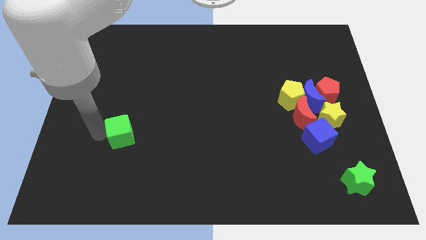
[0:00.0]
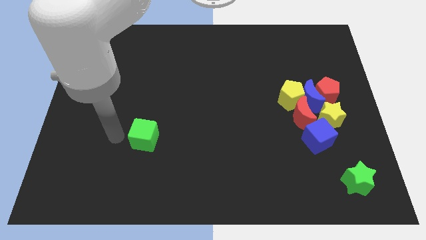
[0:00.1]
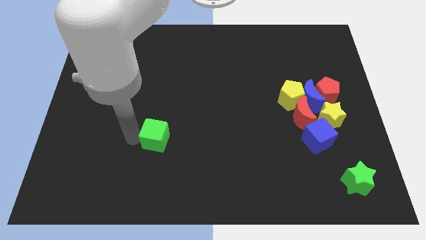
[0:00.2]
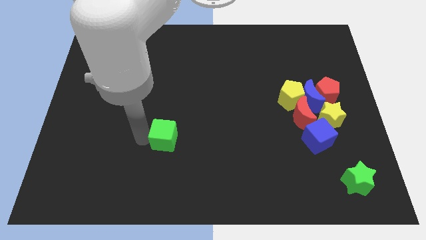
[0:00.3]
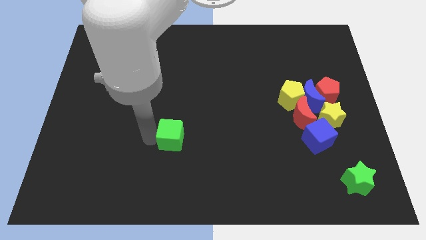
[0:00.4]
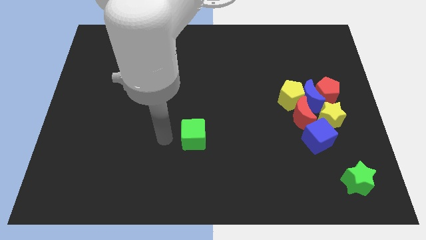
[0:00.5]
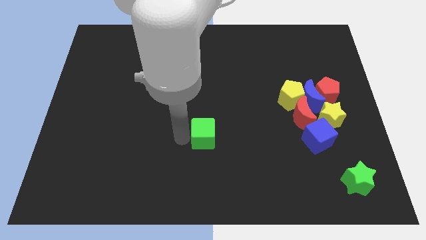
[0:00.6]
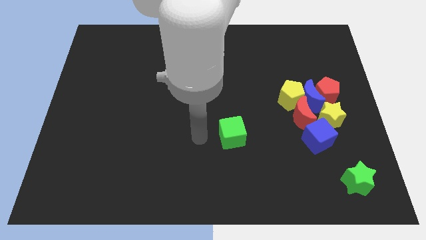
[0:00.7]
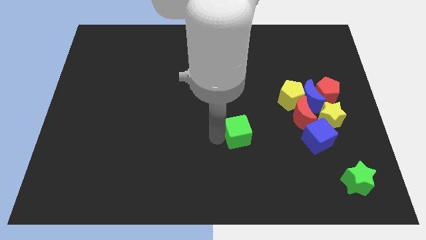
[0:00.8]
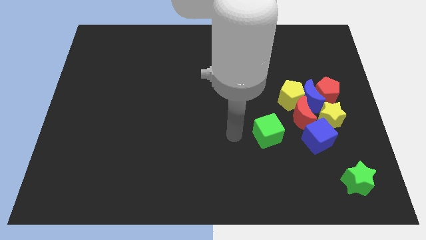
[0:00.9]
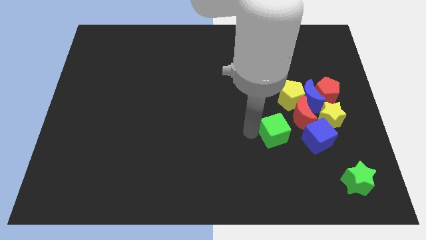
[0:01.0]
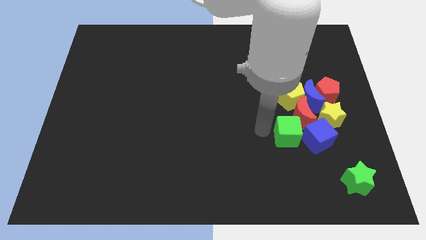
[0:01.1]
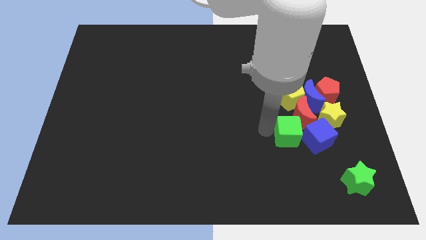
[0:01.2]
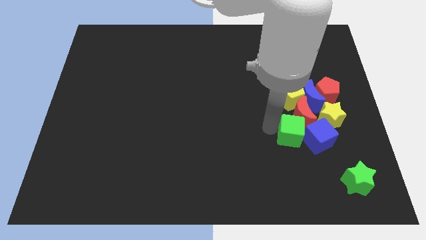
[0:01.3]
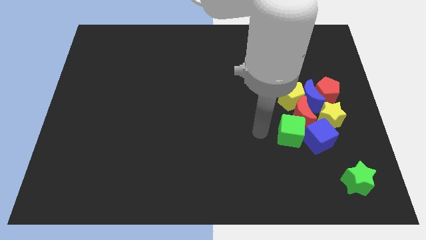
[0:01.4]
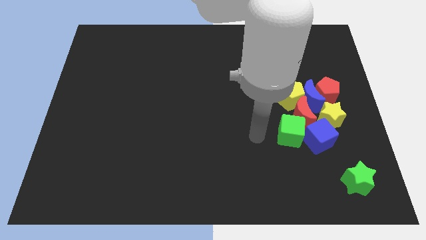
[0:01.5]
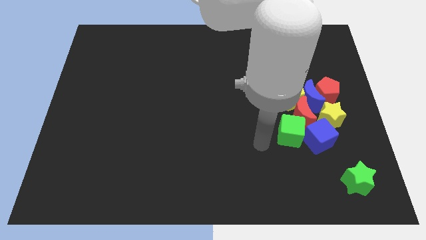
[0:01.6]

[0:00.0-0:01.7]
push the green cube towards the right center

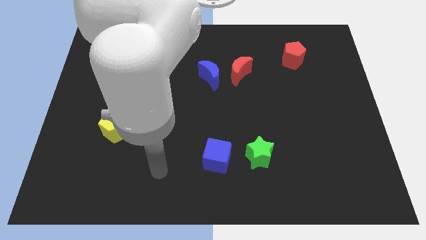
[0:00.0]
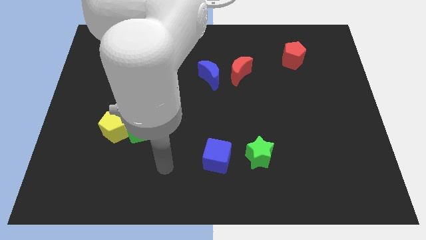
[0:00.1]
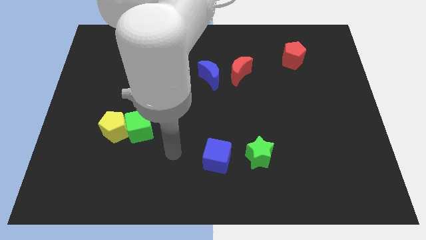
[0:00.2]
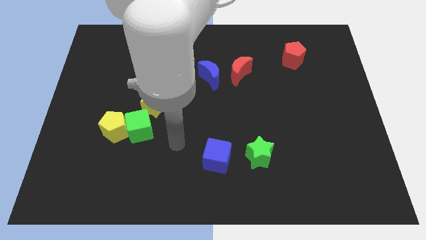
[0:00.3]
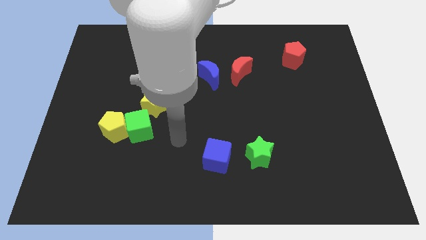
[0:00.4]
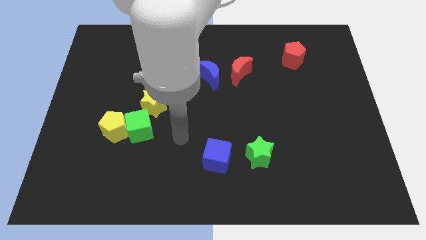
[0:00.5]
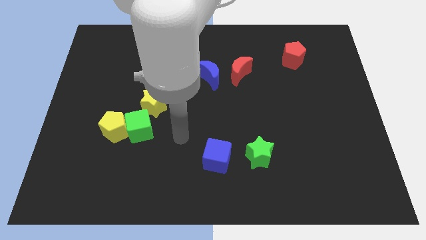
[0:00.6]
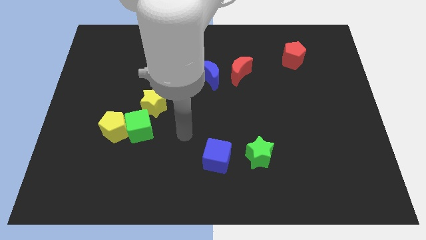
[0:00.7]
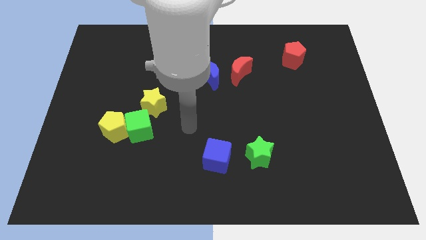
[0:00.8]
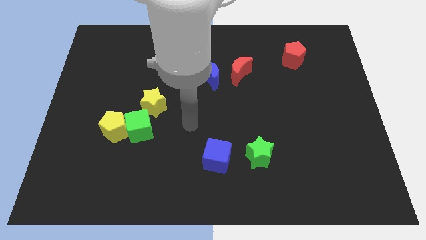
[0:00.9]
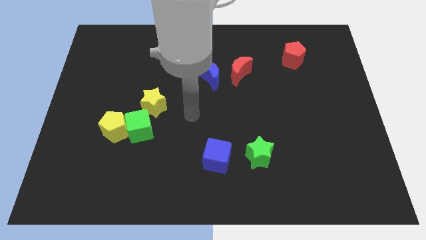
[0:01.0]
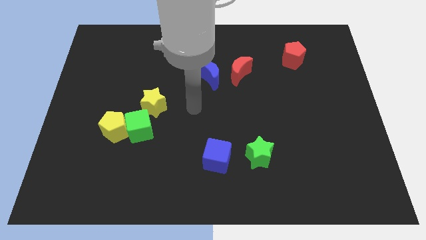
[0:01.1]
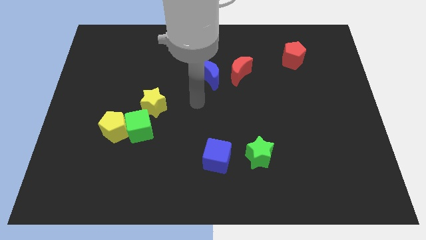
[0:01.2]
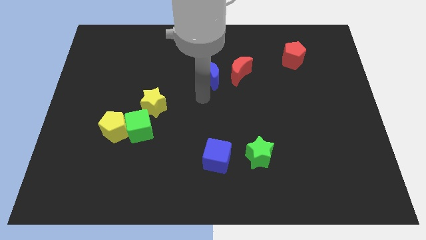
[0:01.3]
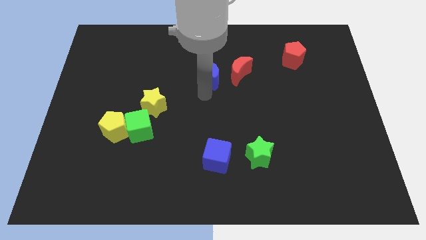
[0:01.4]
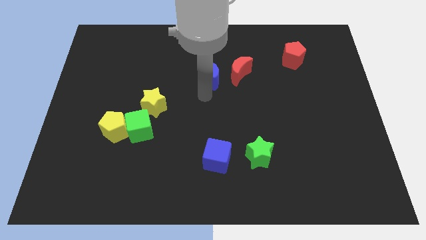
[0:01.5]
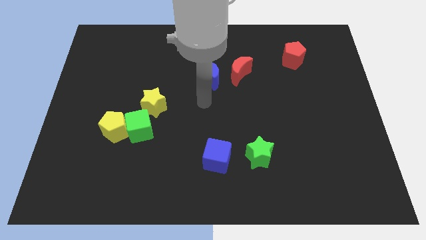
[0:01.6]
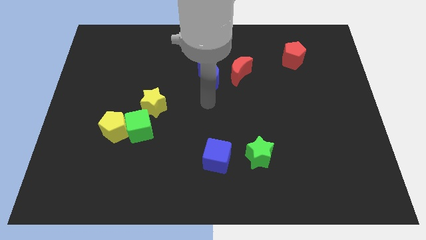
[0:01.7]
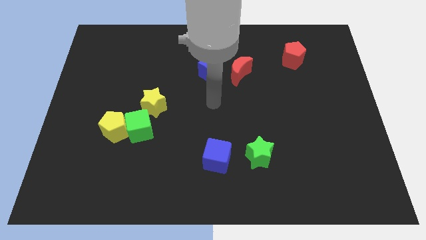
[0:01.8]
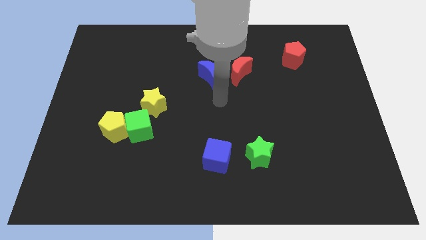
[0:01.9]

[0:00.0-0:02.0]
place your arm in the center

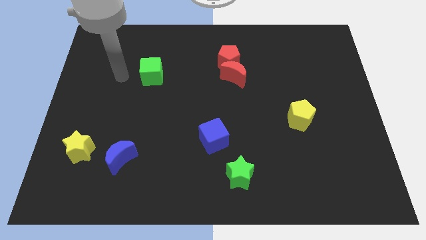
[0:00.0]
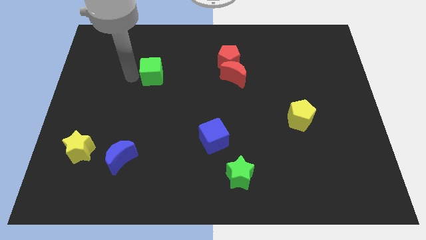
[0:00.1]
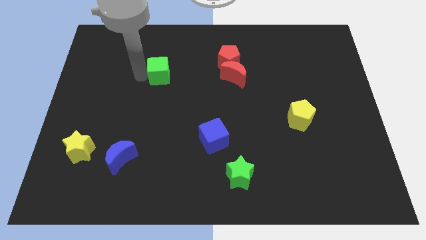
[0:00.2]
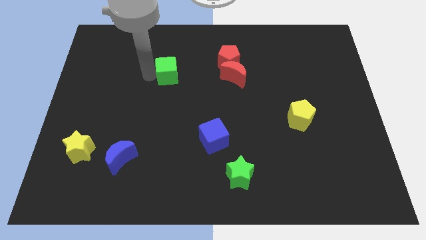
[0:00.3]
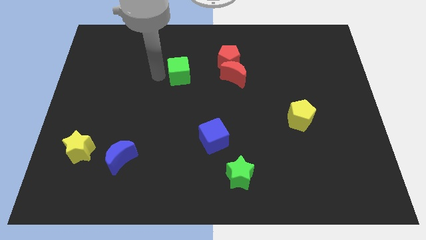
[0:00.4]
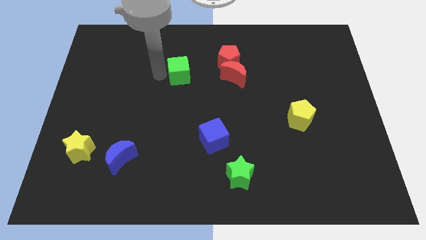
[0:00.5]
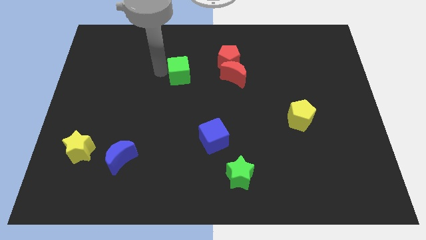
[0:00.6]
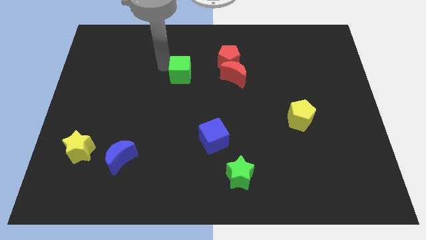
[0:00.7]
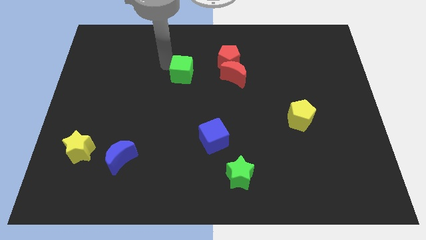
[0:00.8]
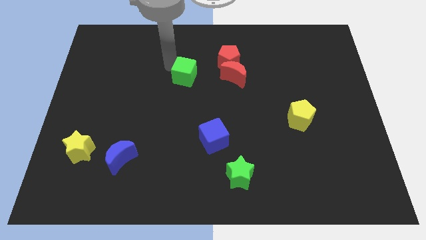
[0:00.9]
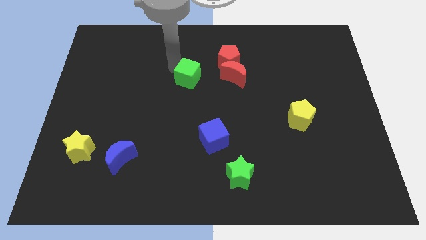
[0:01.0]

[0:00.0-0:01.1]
move the green cube to the left of the red moon

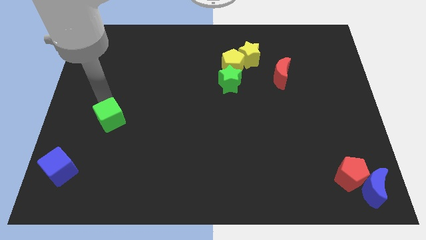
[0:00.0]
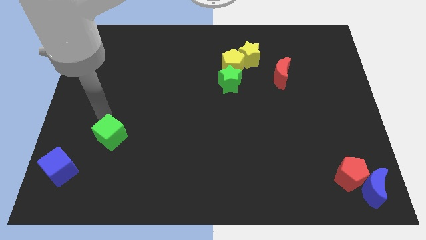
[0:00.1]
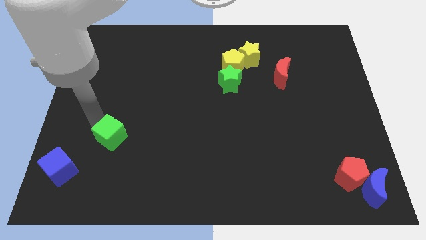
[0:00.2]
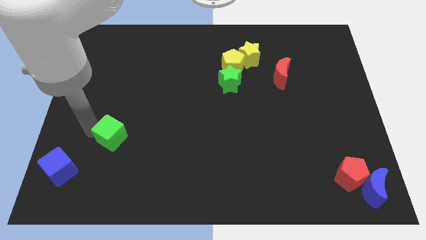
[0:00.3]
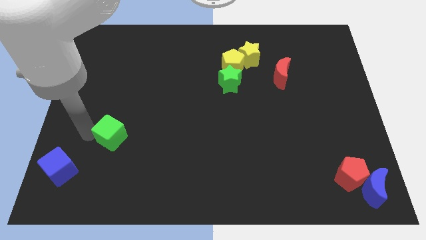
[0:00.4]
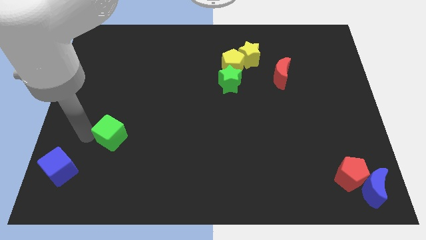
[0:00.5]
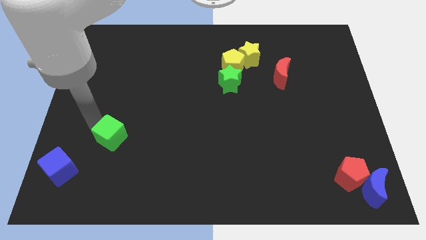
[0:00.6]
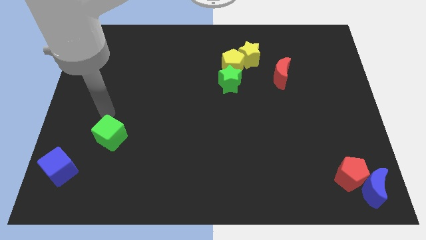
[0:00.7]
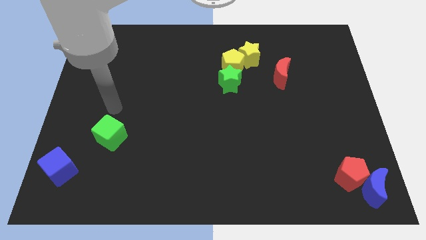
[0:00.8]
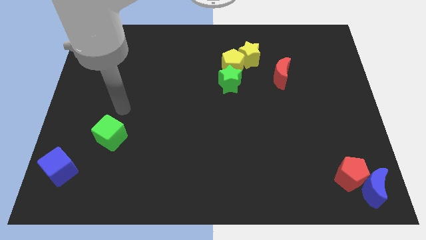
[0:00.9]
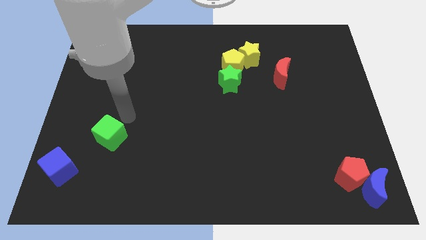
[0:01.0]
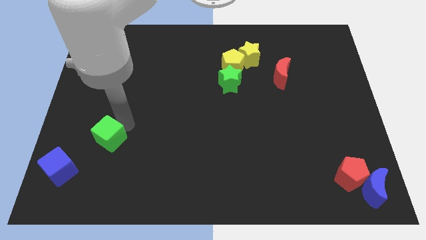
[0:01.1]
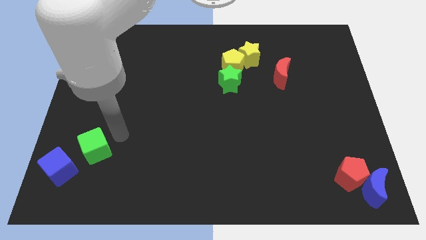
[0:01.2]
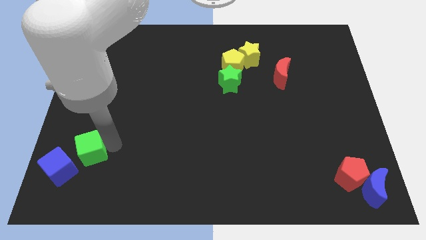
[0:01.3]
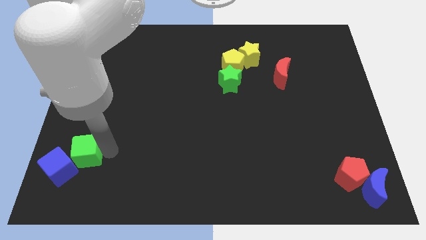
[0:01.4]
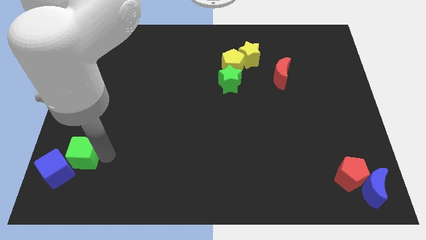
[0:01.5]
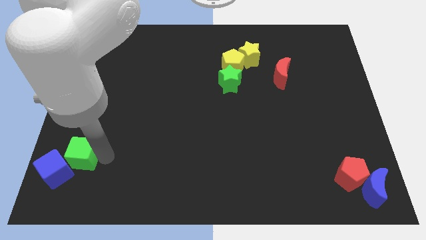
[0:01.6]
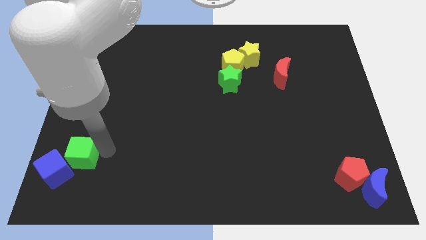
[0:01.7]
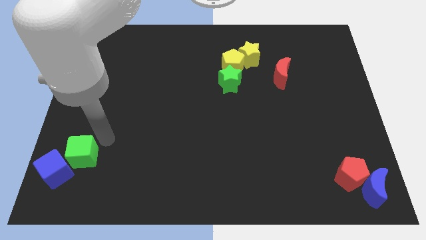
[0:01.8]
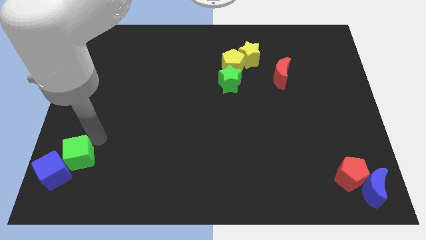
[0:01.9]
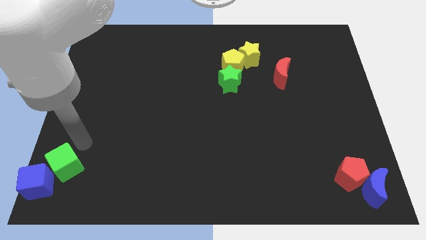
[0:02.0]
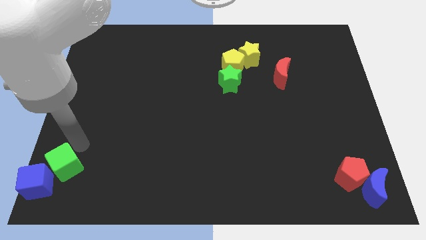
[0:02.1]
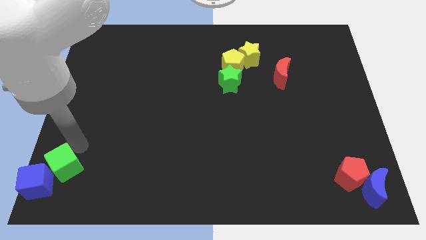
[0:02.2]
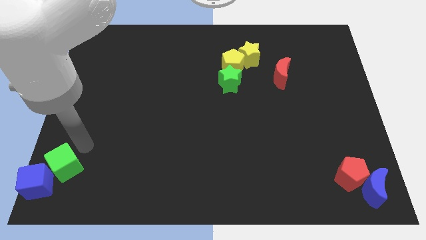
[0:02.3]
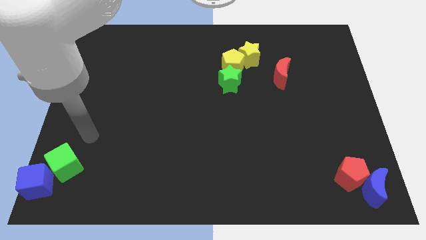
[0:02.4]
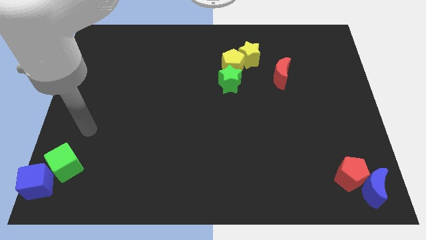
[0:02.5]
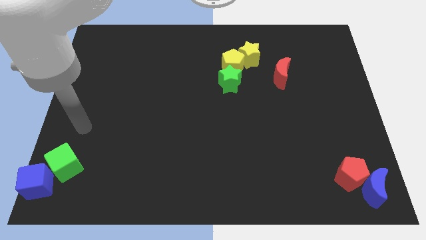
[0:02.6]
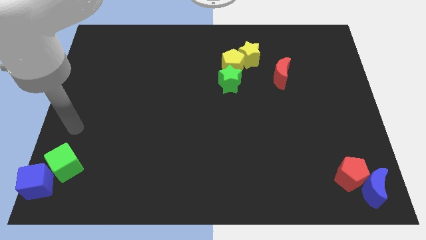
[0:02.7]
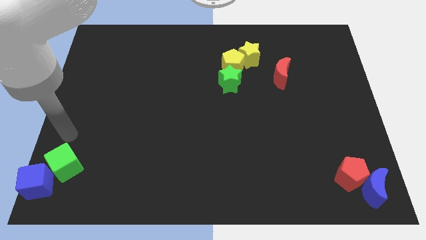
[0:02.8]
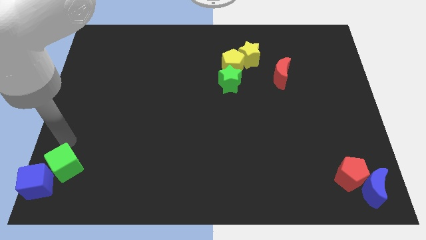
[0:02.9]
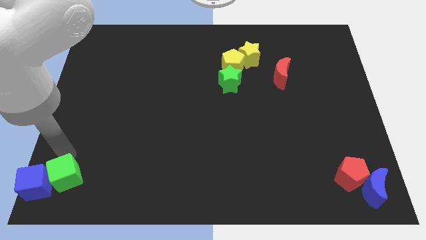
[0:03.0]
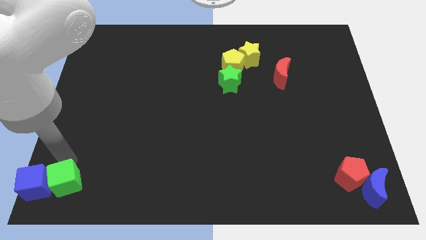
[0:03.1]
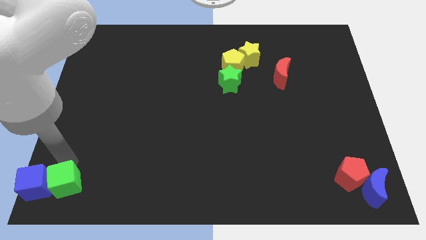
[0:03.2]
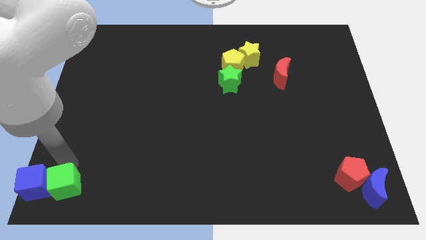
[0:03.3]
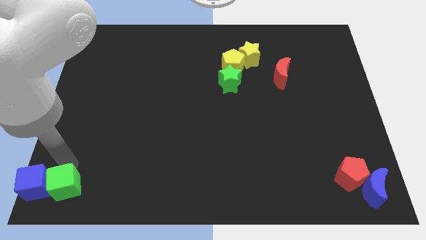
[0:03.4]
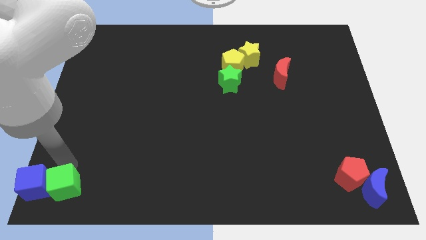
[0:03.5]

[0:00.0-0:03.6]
place green cube beside blue cube

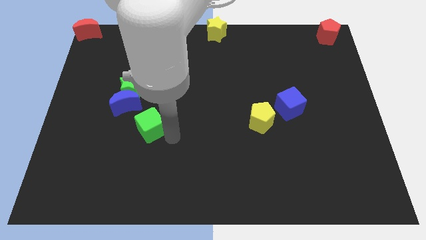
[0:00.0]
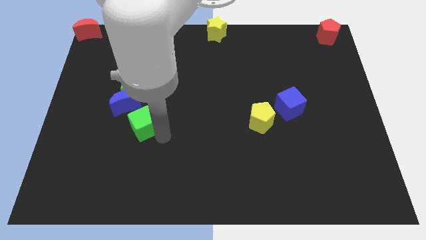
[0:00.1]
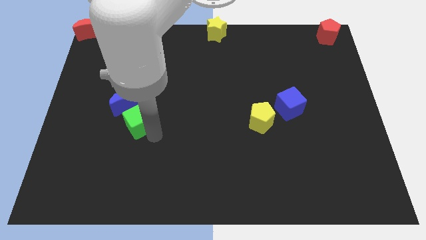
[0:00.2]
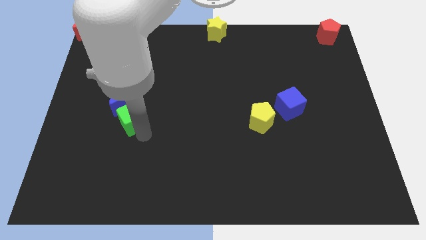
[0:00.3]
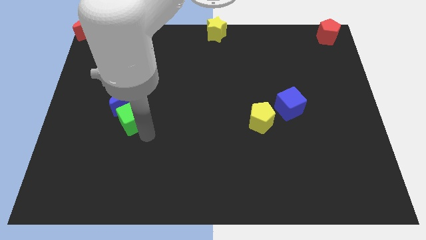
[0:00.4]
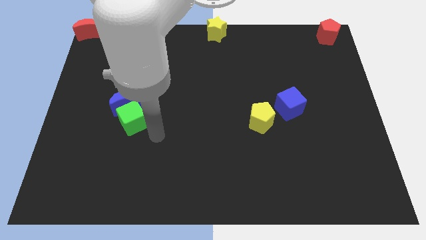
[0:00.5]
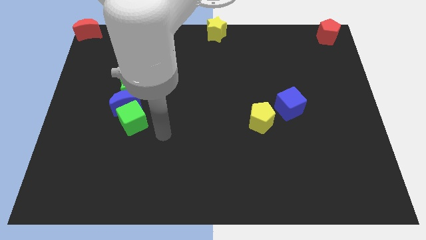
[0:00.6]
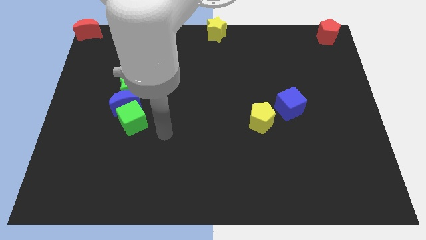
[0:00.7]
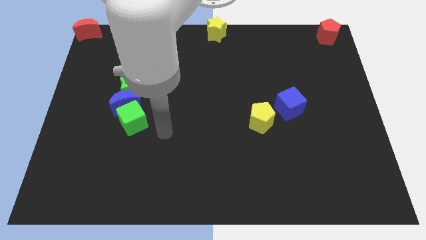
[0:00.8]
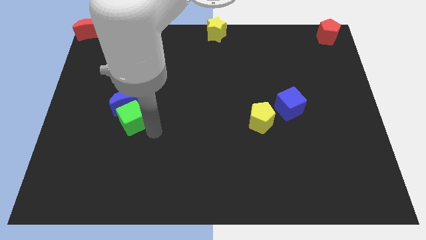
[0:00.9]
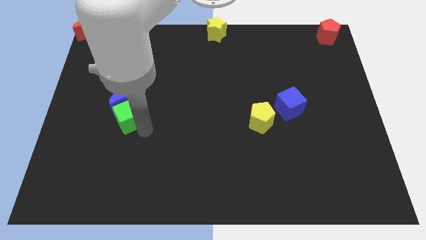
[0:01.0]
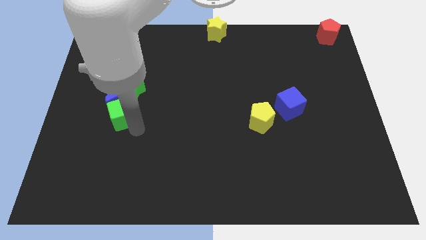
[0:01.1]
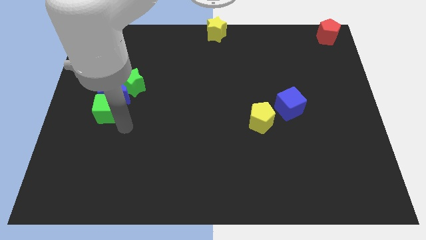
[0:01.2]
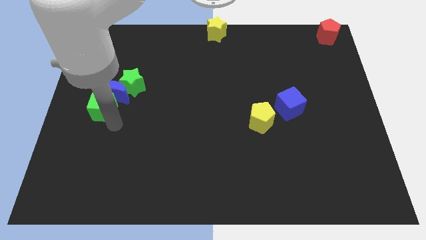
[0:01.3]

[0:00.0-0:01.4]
push the green cube into the blue moon
